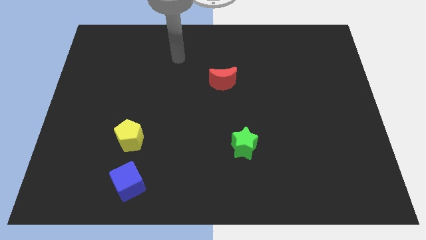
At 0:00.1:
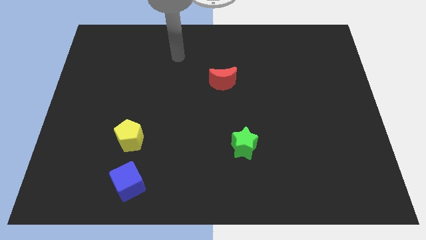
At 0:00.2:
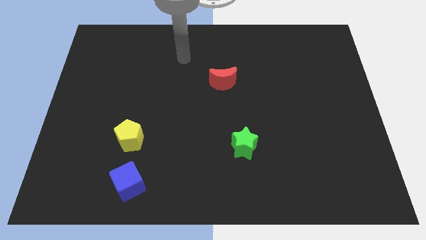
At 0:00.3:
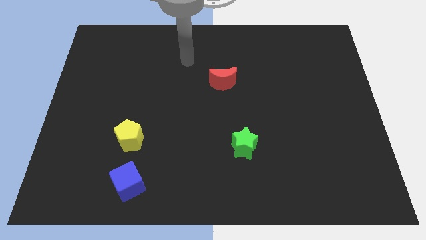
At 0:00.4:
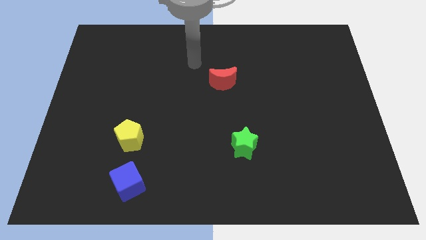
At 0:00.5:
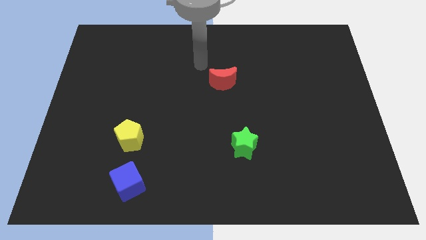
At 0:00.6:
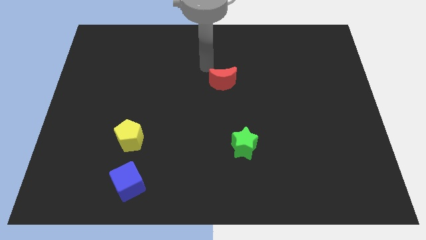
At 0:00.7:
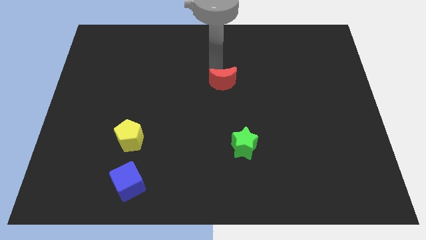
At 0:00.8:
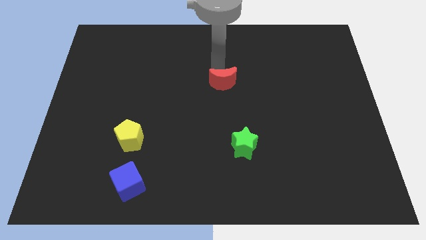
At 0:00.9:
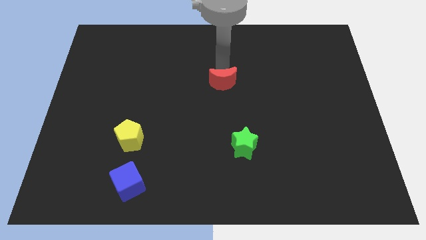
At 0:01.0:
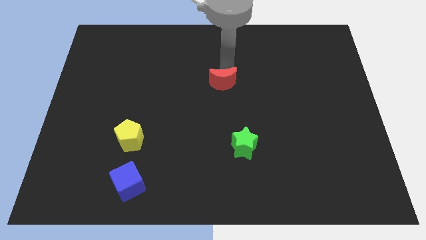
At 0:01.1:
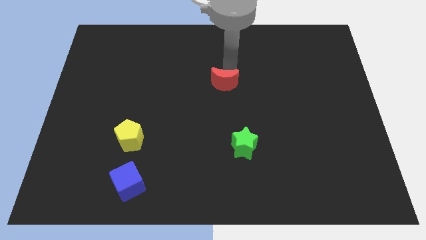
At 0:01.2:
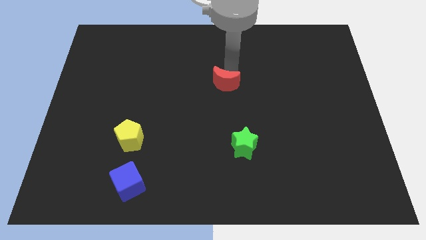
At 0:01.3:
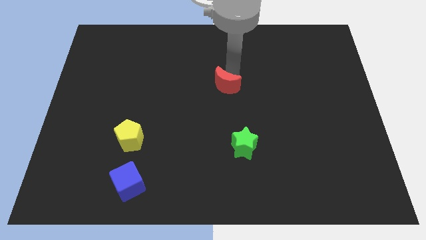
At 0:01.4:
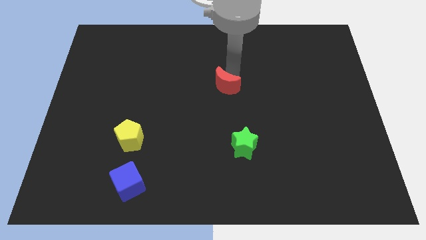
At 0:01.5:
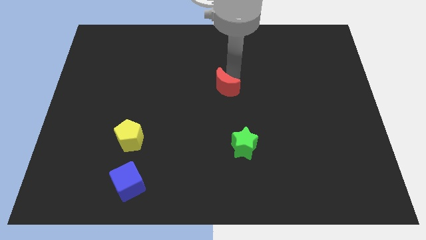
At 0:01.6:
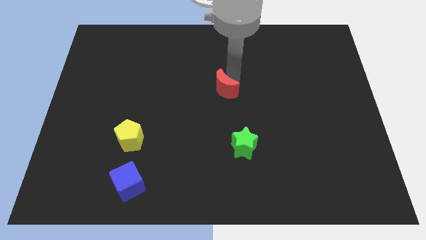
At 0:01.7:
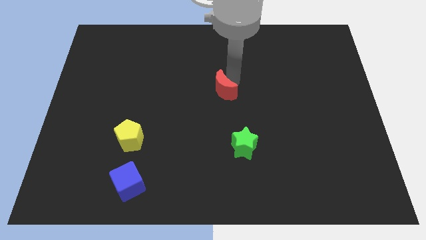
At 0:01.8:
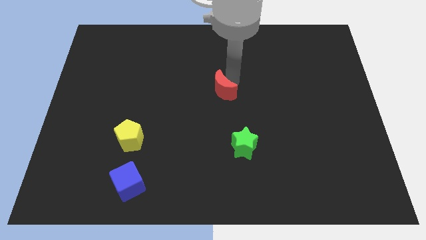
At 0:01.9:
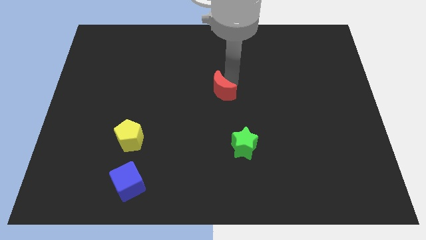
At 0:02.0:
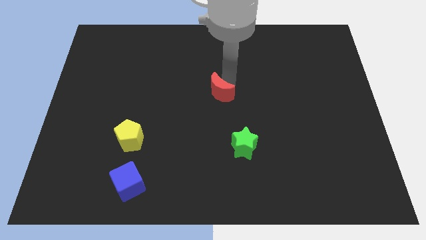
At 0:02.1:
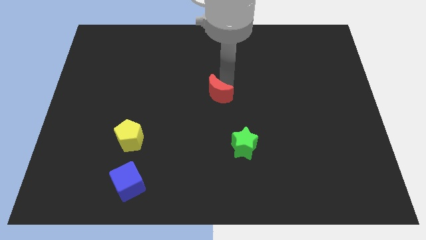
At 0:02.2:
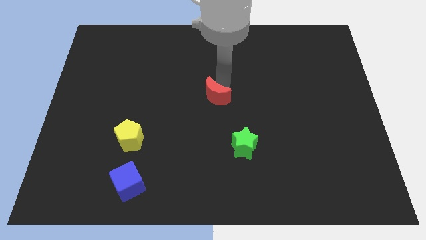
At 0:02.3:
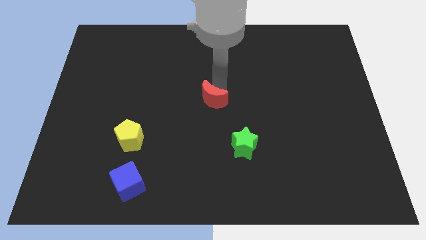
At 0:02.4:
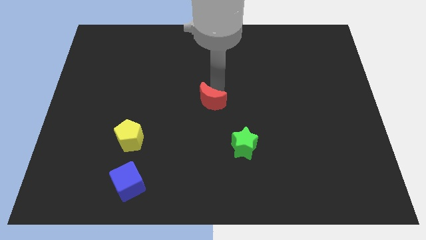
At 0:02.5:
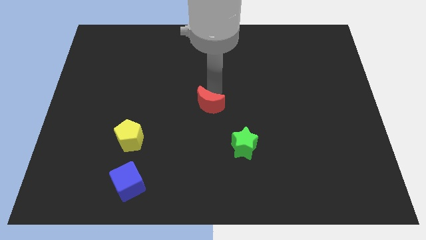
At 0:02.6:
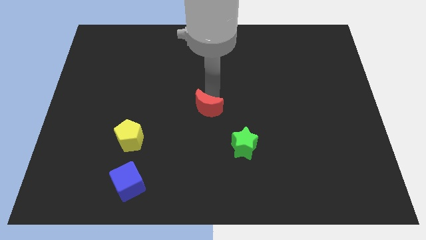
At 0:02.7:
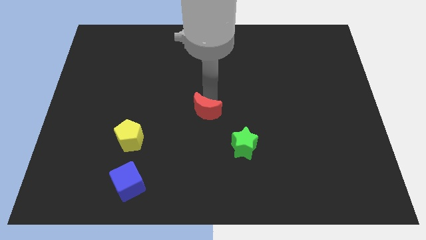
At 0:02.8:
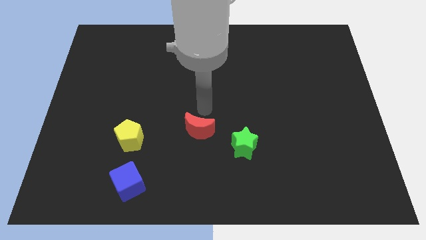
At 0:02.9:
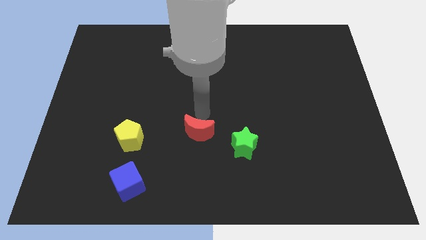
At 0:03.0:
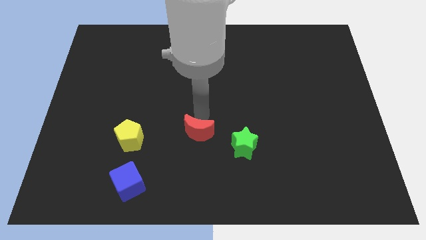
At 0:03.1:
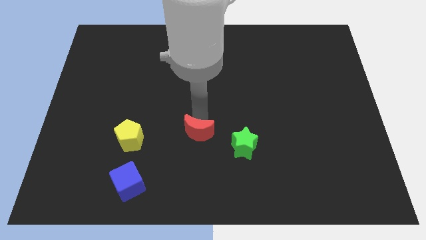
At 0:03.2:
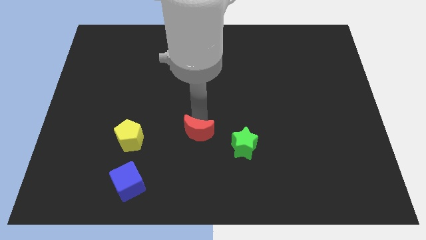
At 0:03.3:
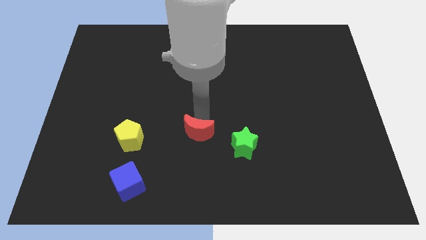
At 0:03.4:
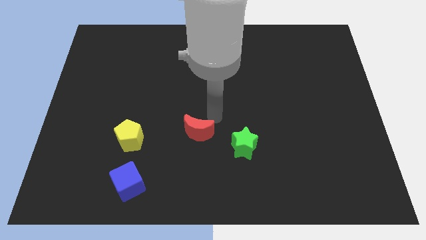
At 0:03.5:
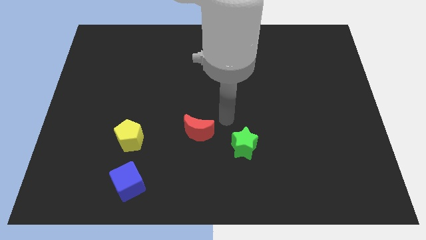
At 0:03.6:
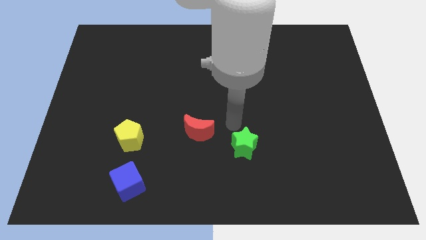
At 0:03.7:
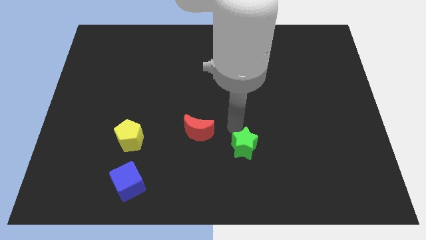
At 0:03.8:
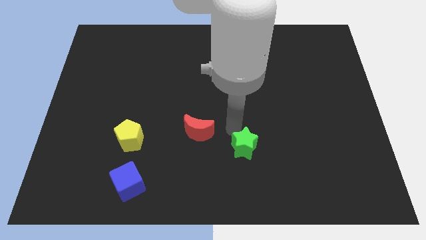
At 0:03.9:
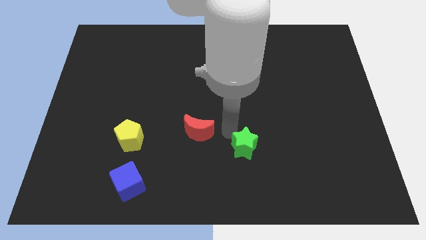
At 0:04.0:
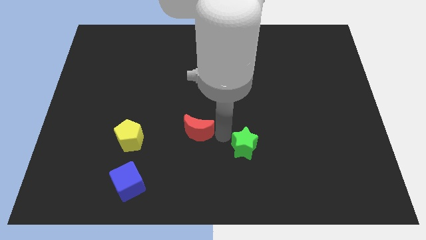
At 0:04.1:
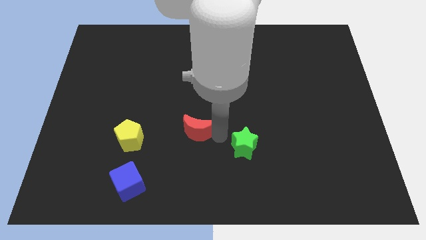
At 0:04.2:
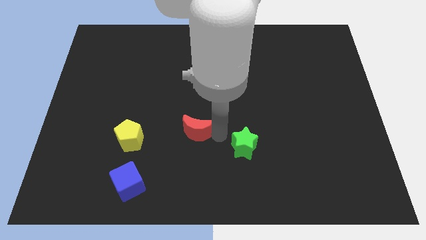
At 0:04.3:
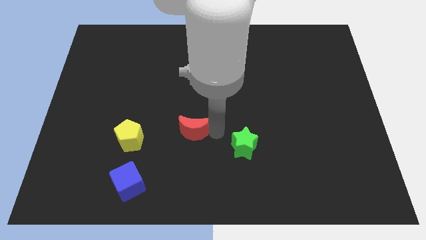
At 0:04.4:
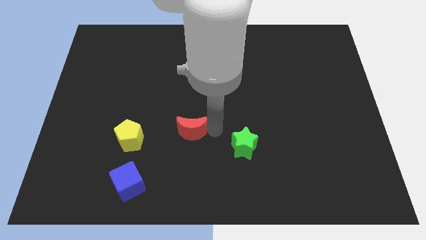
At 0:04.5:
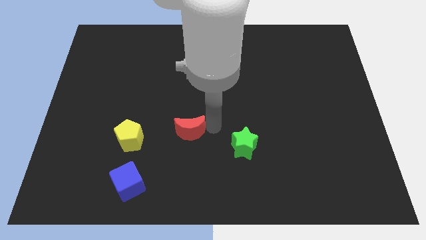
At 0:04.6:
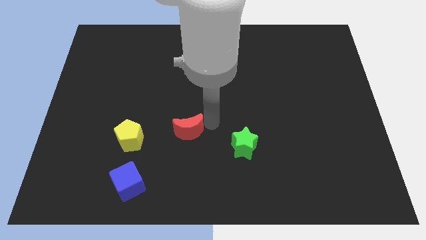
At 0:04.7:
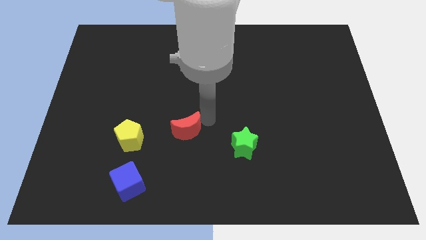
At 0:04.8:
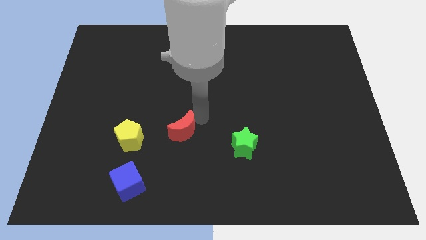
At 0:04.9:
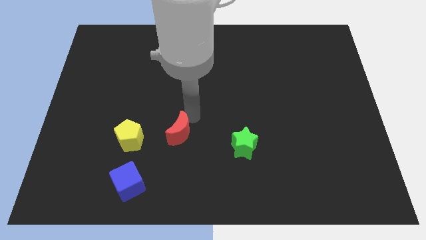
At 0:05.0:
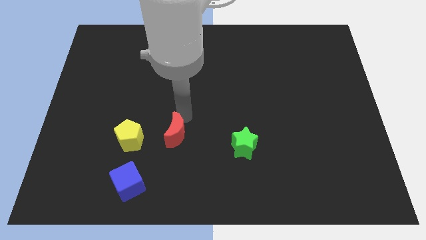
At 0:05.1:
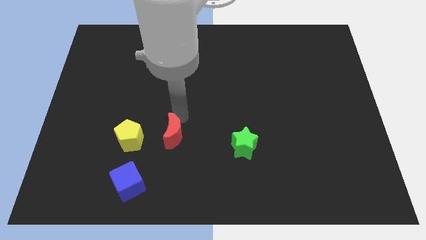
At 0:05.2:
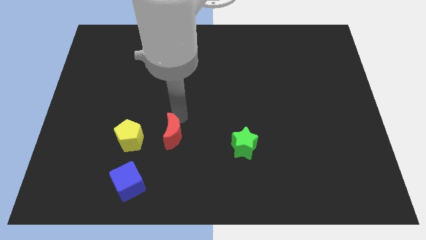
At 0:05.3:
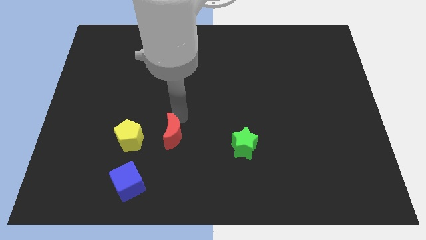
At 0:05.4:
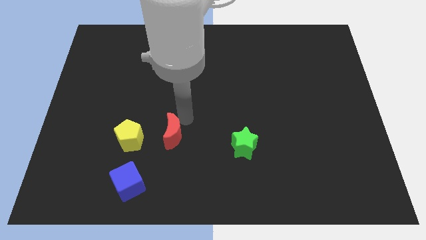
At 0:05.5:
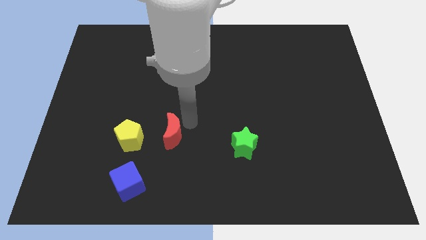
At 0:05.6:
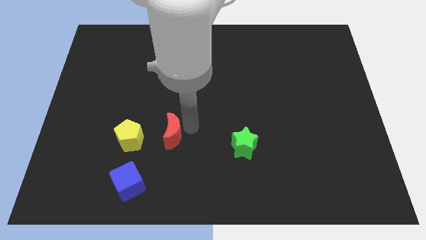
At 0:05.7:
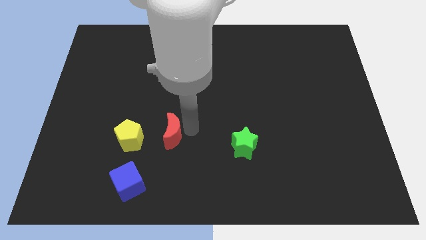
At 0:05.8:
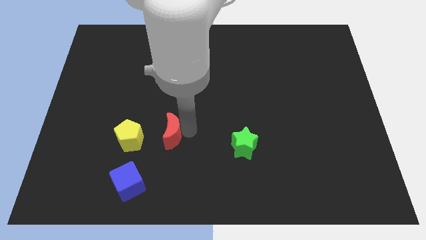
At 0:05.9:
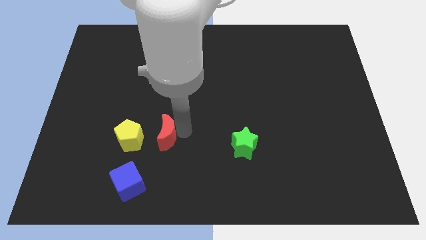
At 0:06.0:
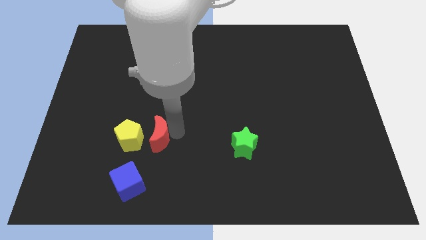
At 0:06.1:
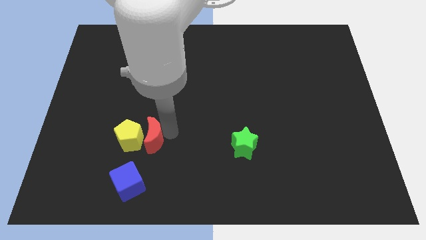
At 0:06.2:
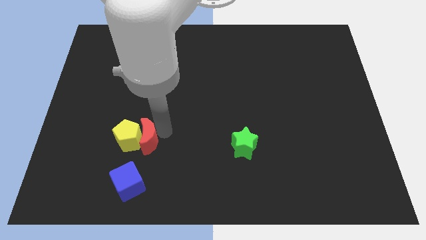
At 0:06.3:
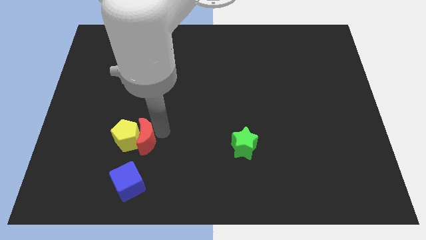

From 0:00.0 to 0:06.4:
push the red block next to the yellow block

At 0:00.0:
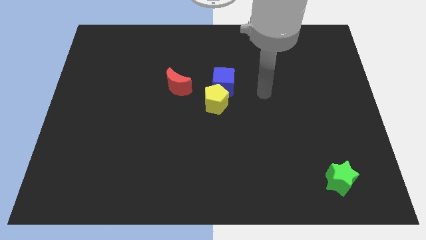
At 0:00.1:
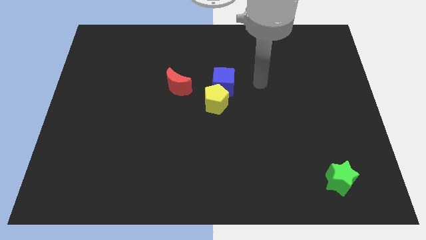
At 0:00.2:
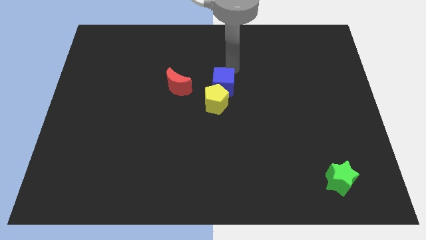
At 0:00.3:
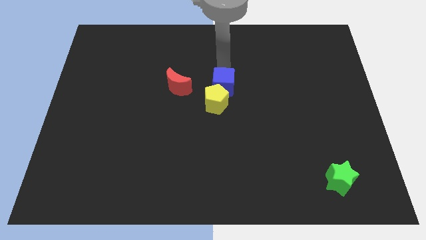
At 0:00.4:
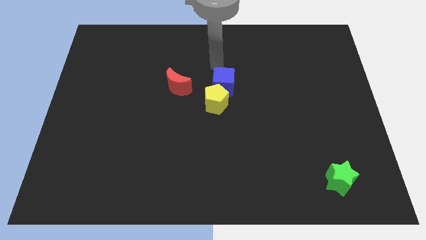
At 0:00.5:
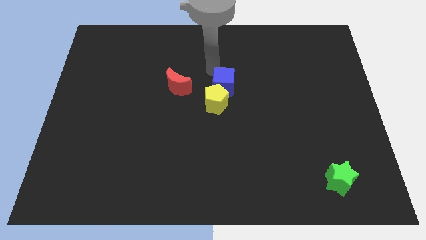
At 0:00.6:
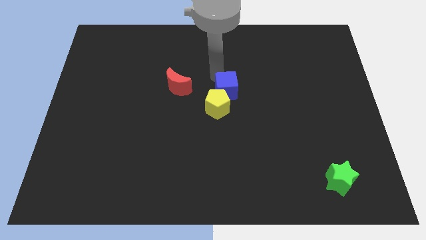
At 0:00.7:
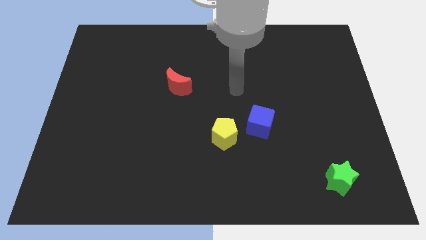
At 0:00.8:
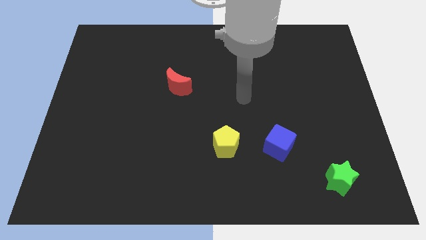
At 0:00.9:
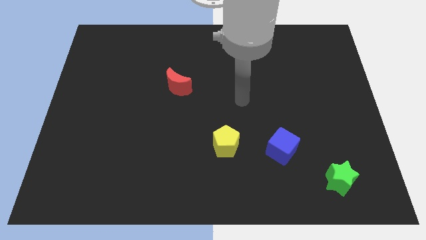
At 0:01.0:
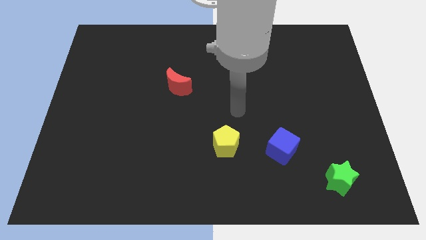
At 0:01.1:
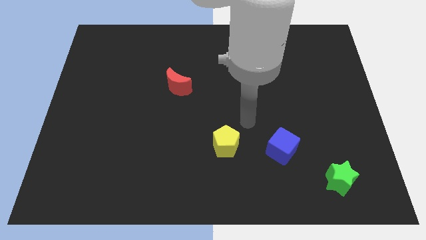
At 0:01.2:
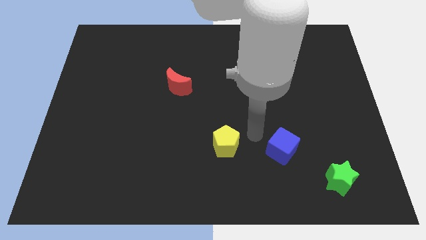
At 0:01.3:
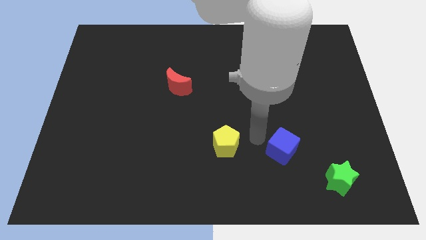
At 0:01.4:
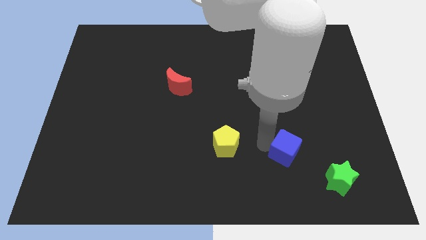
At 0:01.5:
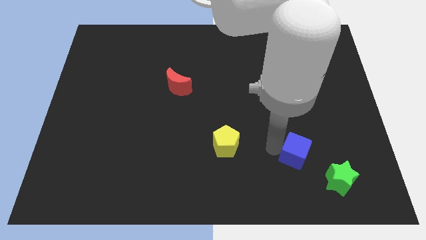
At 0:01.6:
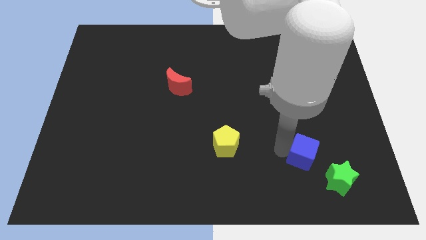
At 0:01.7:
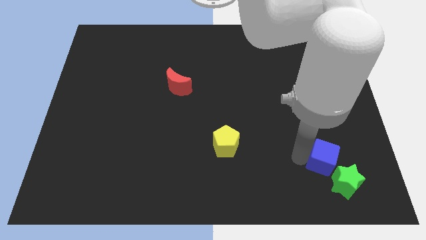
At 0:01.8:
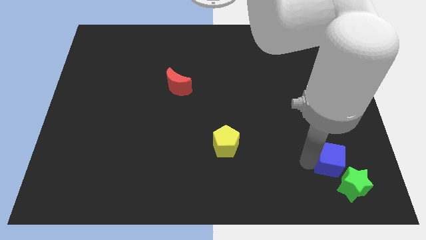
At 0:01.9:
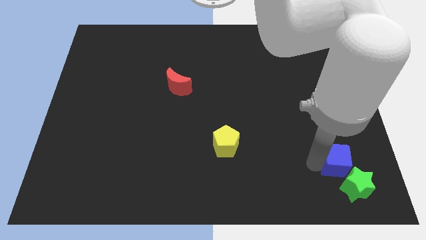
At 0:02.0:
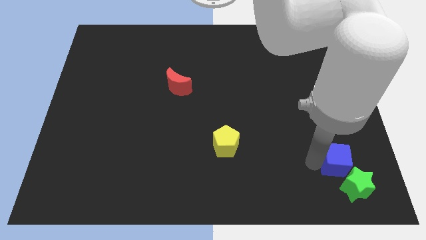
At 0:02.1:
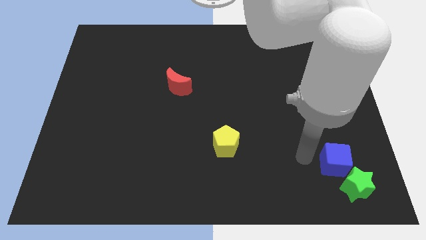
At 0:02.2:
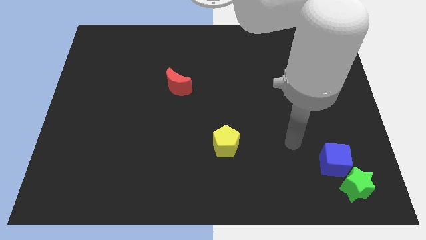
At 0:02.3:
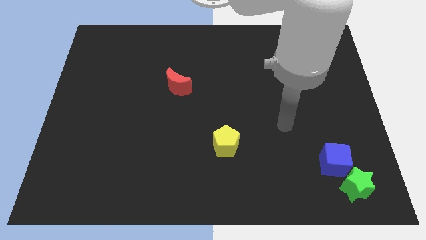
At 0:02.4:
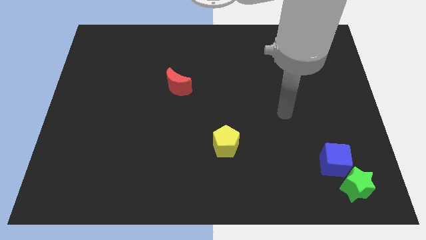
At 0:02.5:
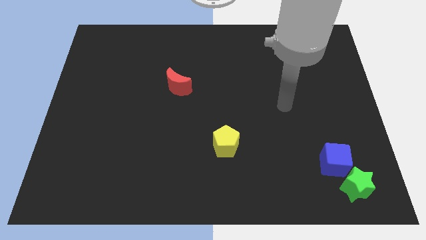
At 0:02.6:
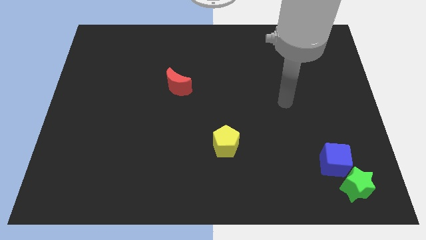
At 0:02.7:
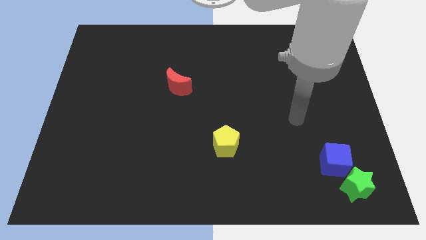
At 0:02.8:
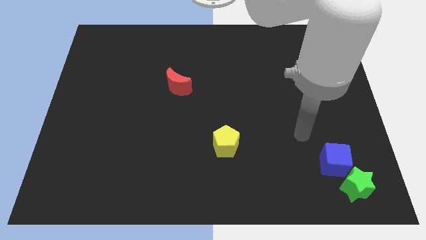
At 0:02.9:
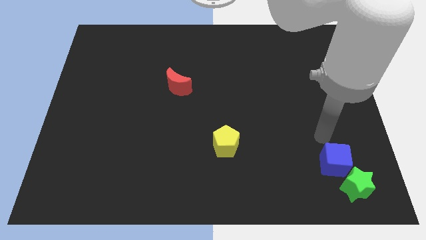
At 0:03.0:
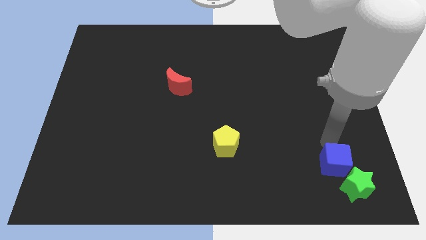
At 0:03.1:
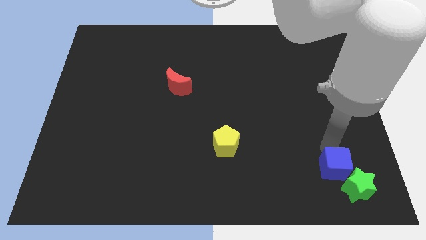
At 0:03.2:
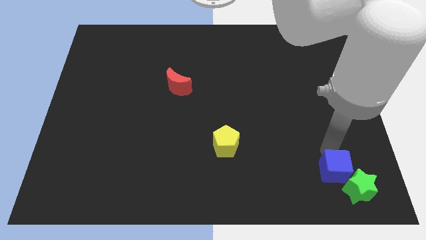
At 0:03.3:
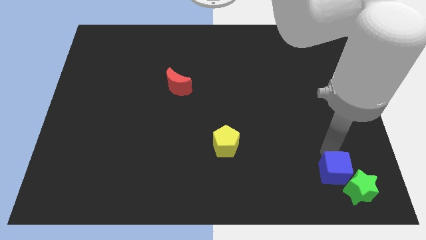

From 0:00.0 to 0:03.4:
move the blue block to the green star
